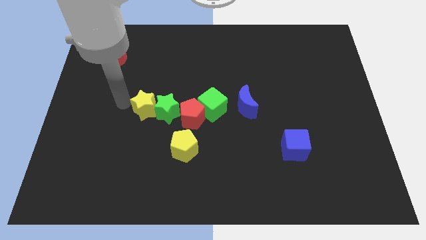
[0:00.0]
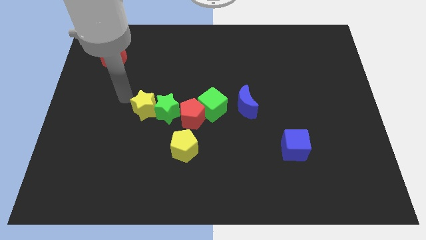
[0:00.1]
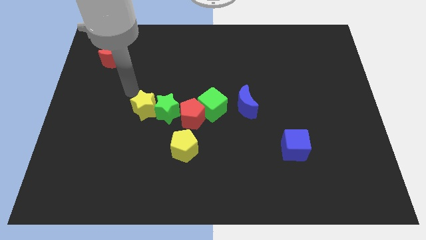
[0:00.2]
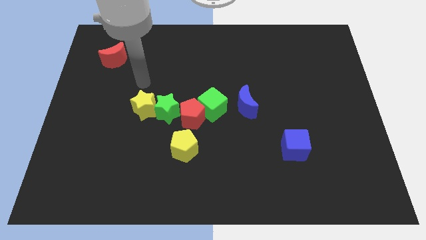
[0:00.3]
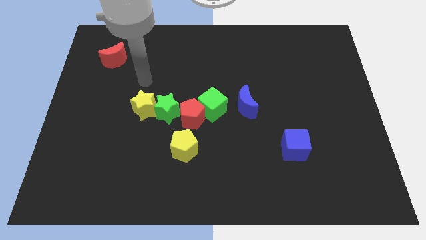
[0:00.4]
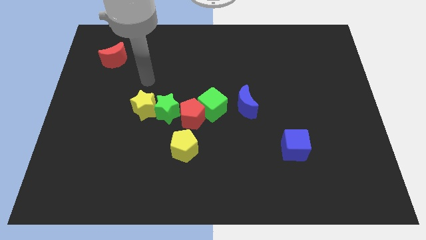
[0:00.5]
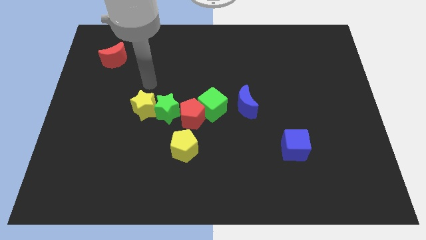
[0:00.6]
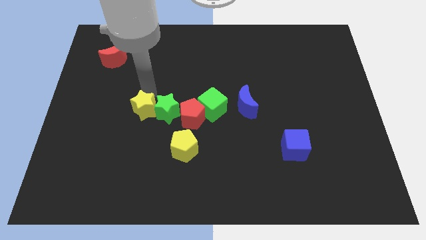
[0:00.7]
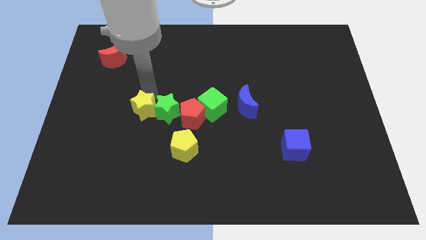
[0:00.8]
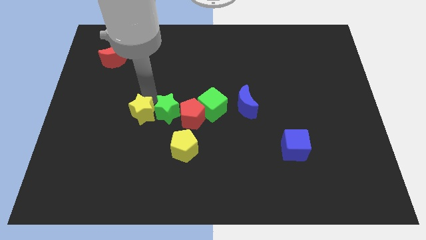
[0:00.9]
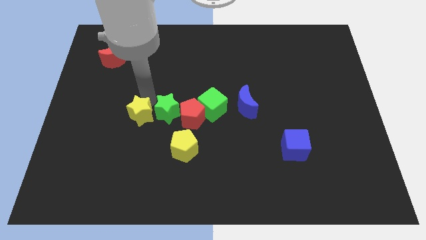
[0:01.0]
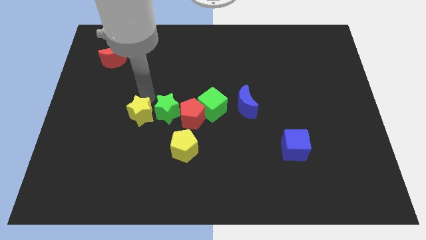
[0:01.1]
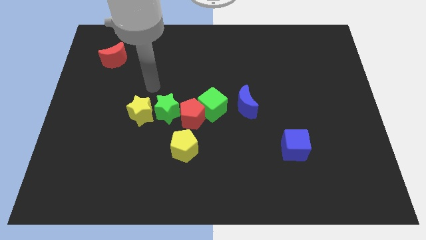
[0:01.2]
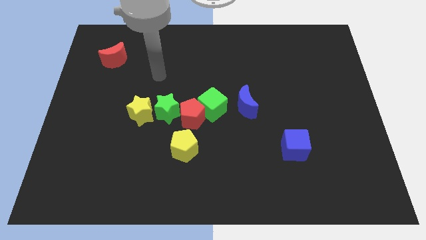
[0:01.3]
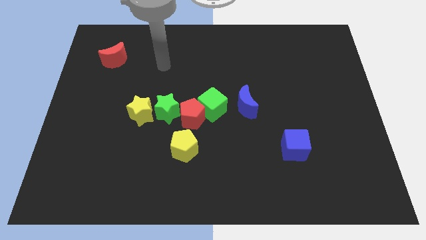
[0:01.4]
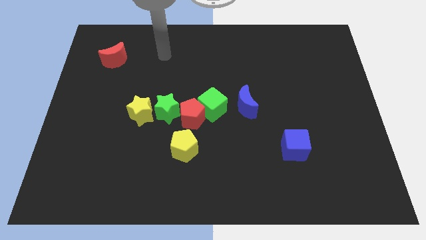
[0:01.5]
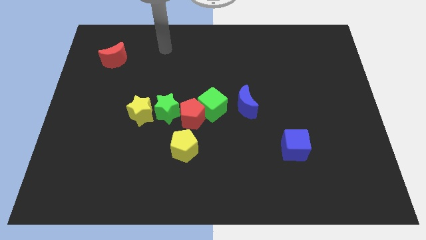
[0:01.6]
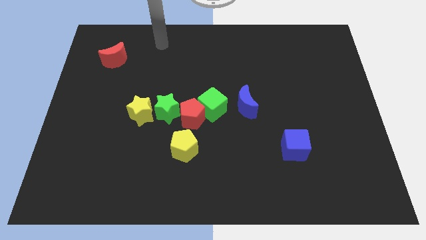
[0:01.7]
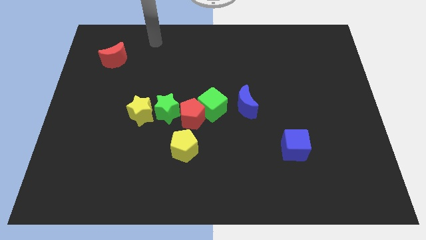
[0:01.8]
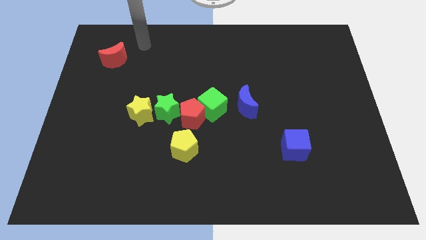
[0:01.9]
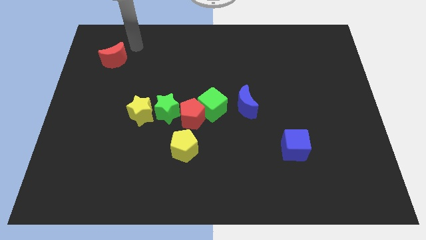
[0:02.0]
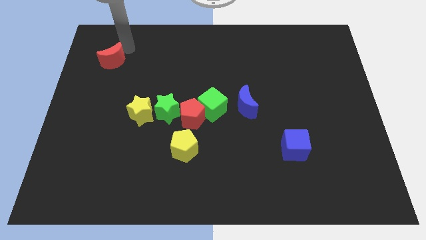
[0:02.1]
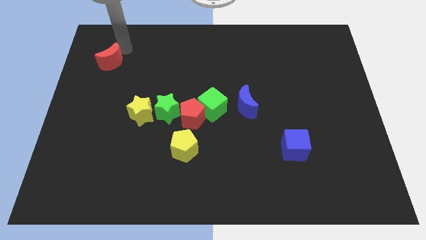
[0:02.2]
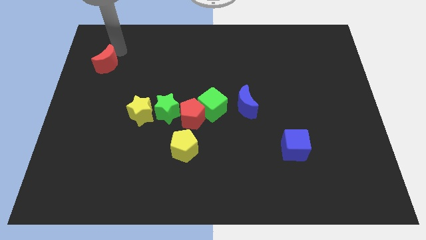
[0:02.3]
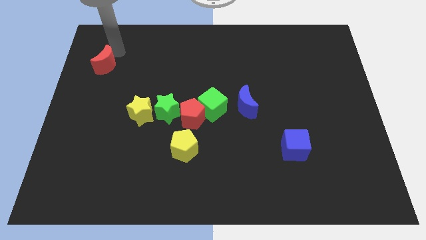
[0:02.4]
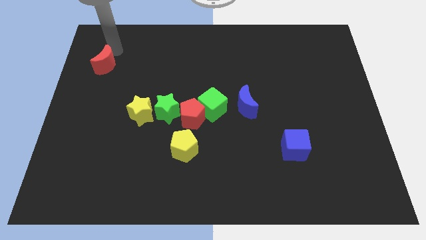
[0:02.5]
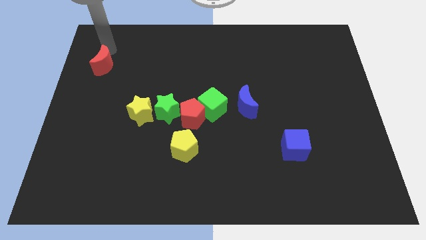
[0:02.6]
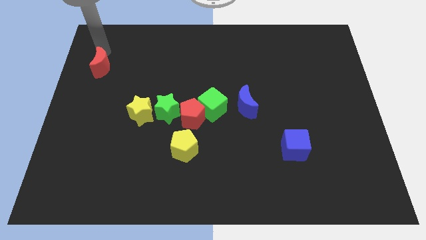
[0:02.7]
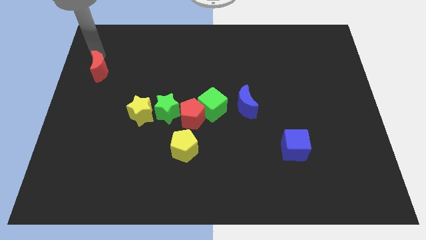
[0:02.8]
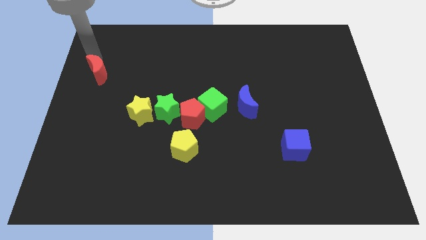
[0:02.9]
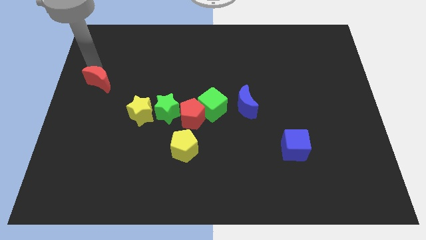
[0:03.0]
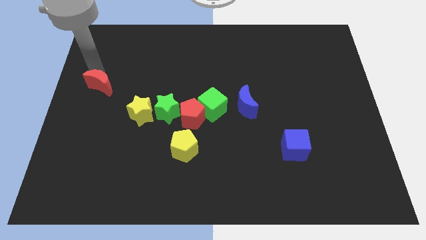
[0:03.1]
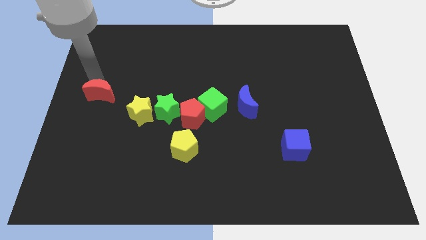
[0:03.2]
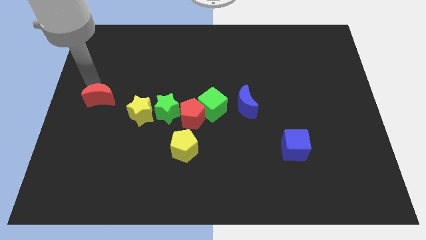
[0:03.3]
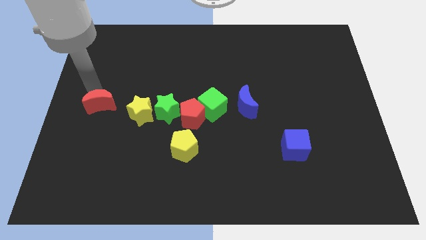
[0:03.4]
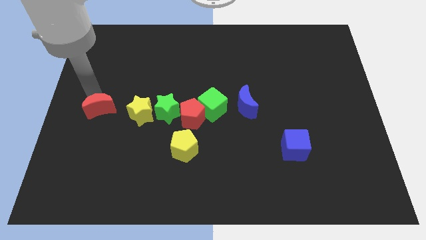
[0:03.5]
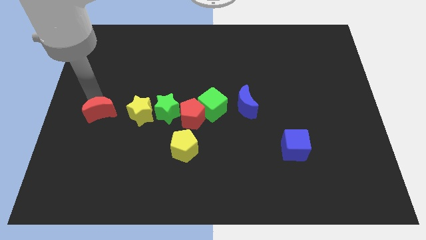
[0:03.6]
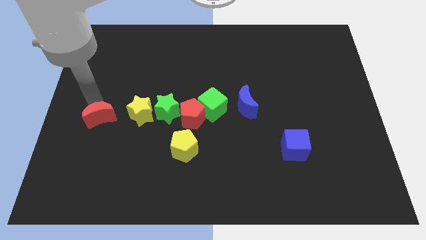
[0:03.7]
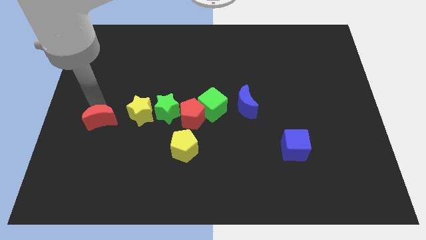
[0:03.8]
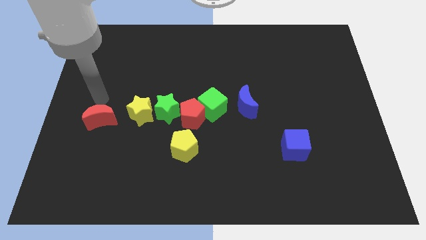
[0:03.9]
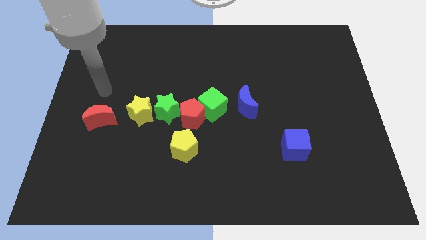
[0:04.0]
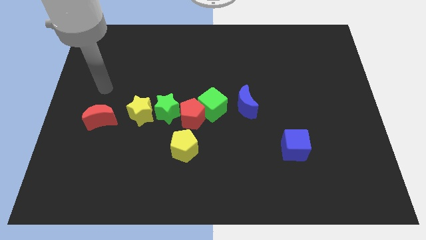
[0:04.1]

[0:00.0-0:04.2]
push the red crescent to the left side of the yellow star

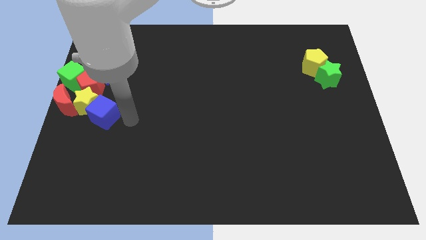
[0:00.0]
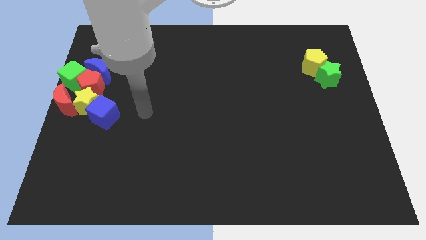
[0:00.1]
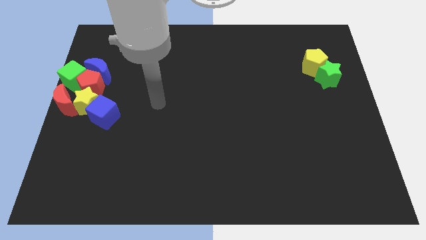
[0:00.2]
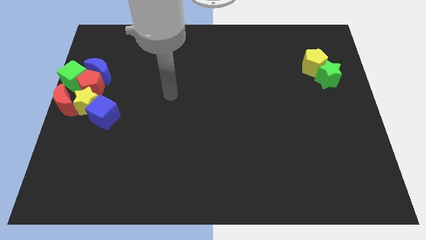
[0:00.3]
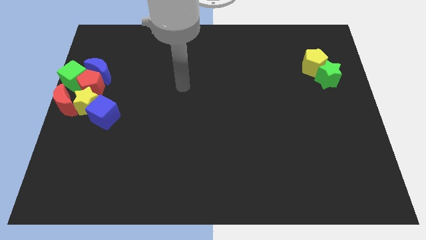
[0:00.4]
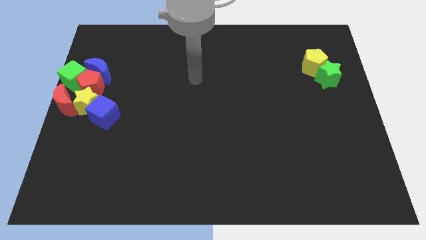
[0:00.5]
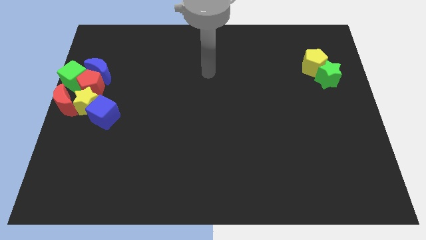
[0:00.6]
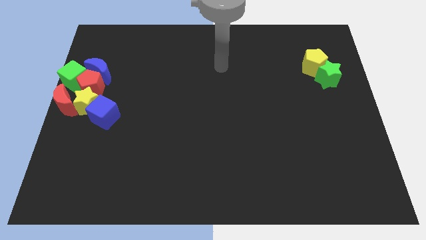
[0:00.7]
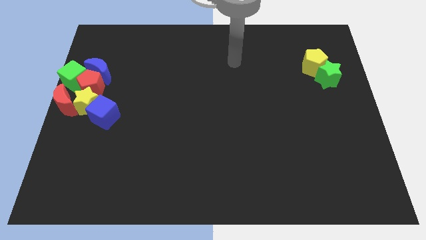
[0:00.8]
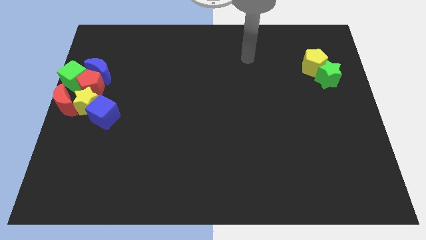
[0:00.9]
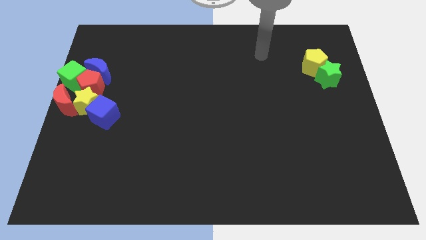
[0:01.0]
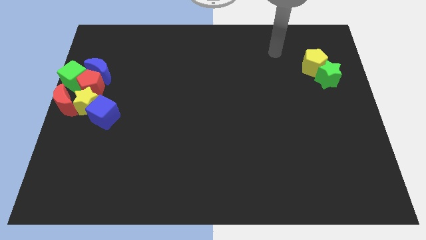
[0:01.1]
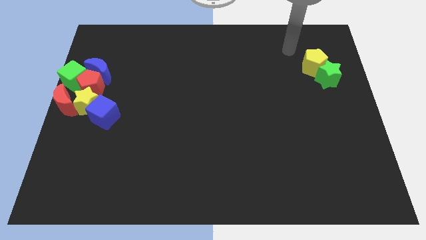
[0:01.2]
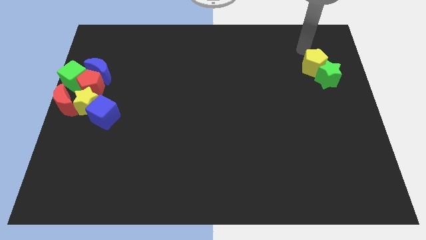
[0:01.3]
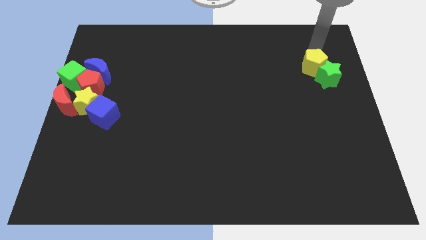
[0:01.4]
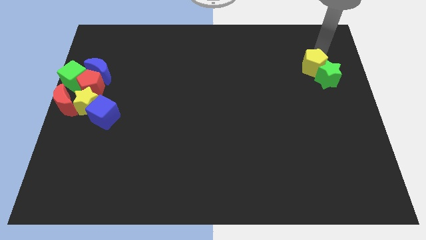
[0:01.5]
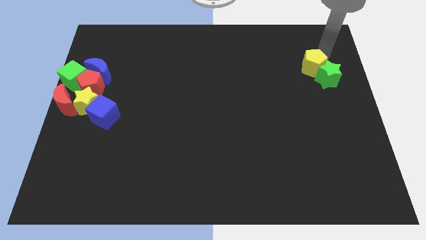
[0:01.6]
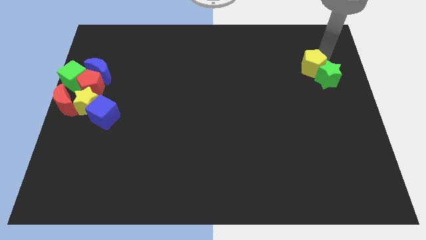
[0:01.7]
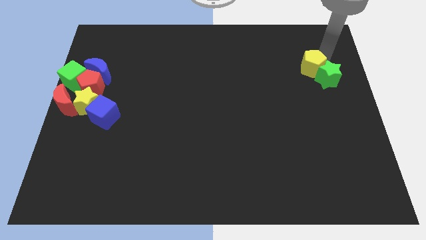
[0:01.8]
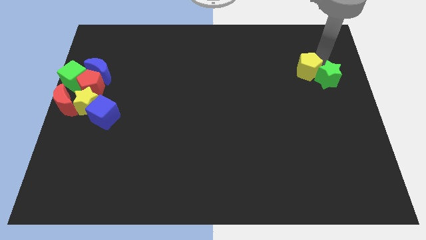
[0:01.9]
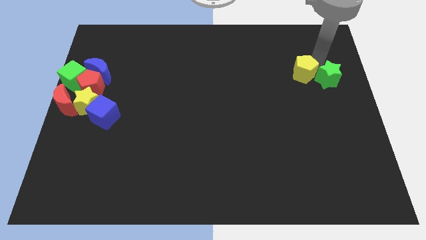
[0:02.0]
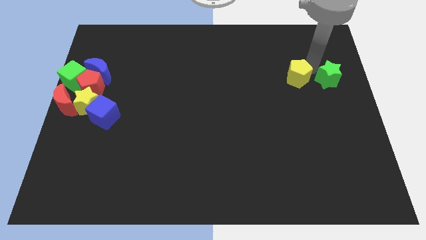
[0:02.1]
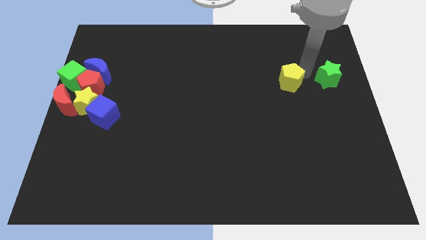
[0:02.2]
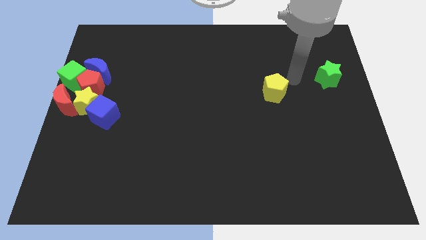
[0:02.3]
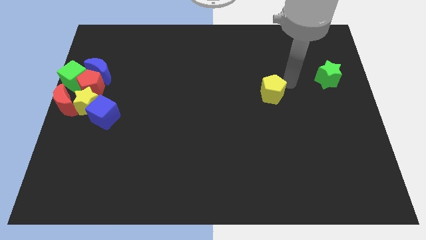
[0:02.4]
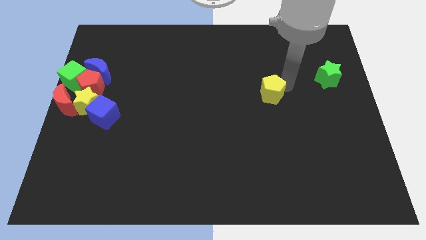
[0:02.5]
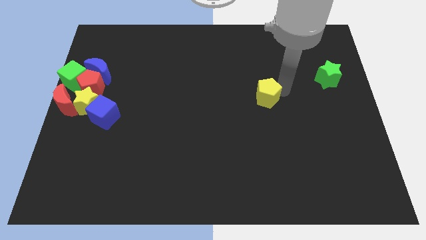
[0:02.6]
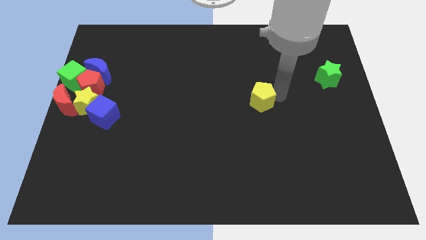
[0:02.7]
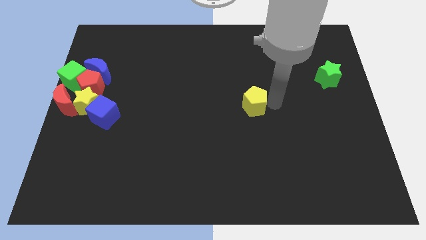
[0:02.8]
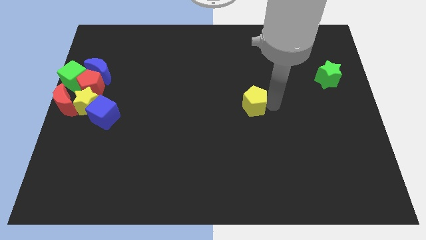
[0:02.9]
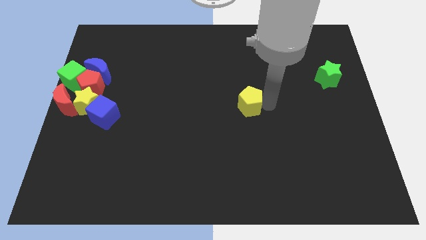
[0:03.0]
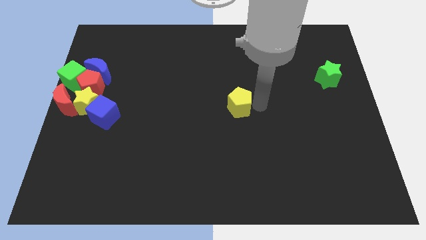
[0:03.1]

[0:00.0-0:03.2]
separate the yellow pentagon from green star

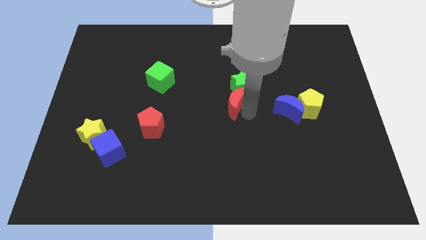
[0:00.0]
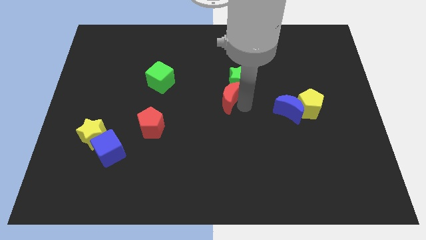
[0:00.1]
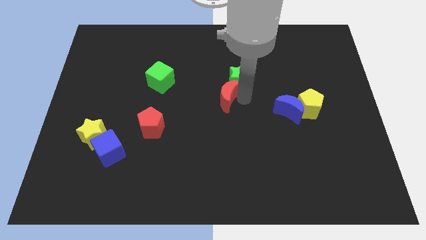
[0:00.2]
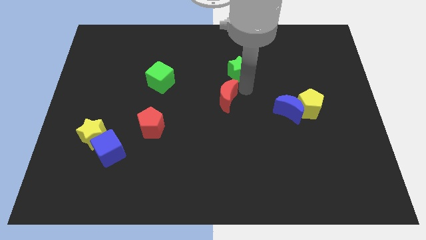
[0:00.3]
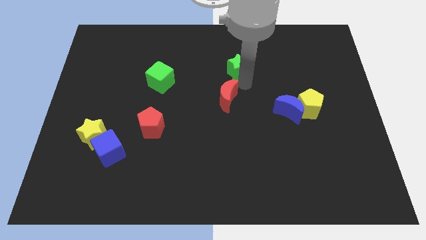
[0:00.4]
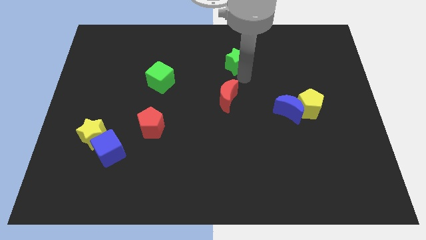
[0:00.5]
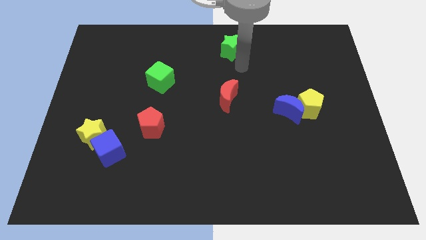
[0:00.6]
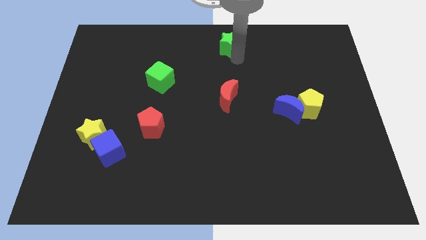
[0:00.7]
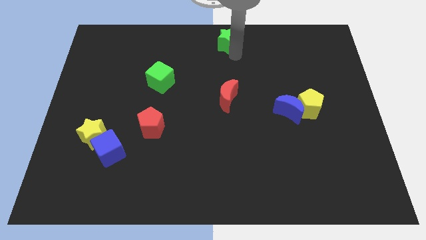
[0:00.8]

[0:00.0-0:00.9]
separate green star from red moon

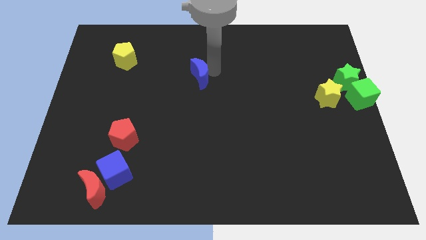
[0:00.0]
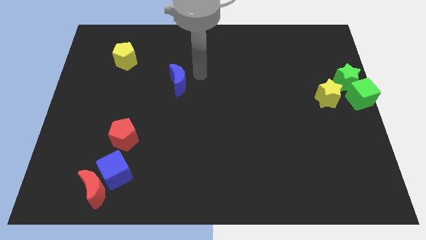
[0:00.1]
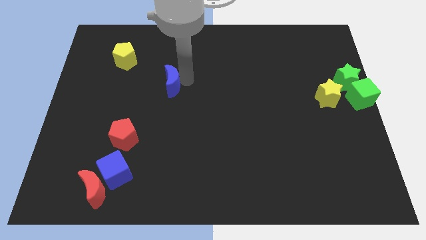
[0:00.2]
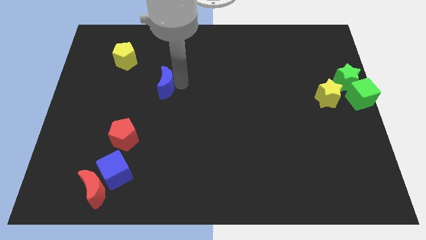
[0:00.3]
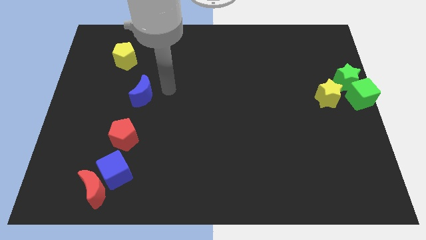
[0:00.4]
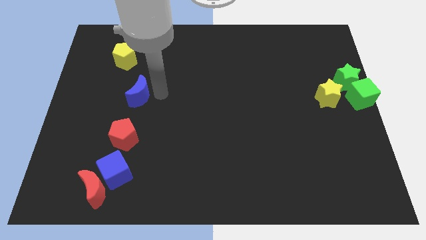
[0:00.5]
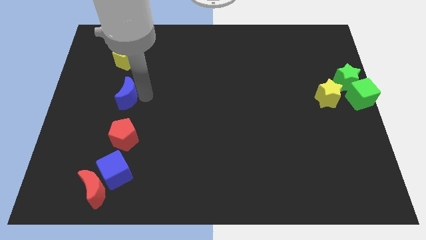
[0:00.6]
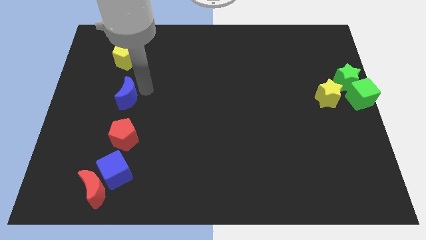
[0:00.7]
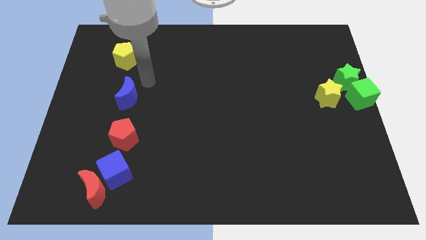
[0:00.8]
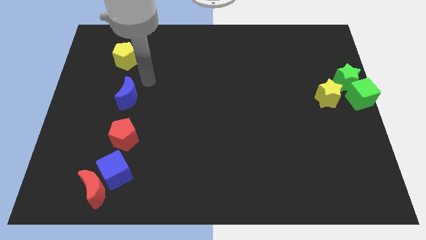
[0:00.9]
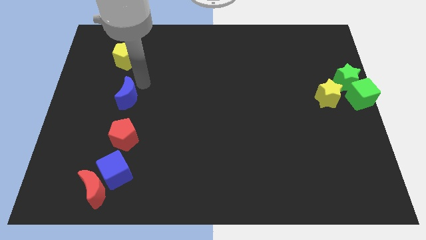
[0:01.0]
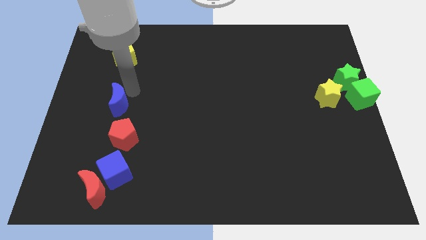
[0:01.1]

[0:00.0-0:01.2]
place blue crescent between yellow pentagon and red pentagon
